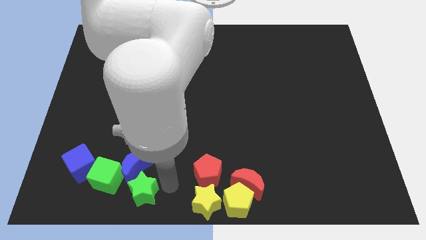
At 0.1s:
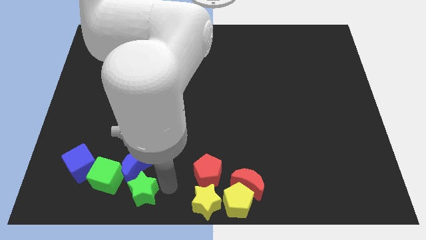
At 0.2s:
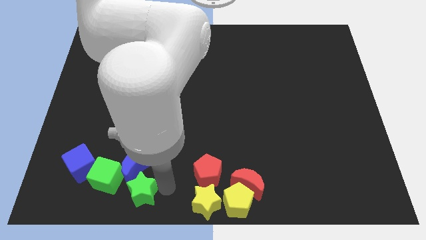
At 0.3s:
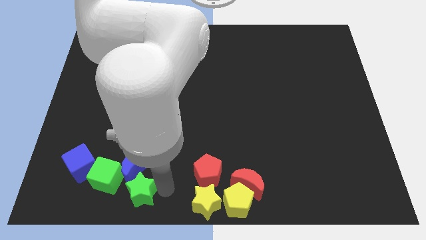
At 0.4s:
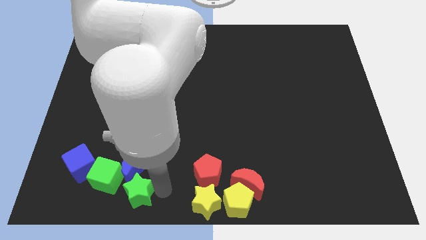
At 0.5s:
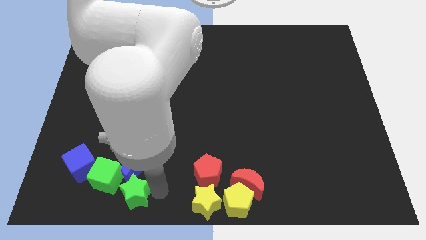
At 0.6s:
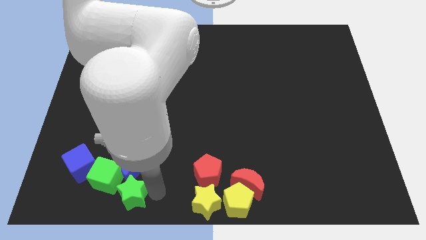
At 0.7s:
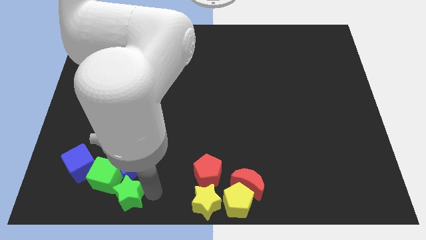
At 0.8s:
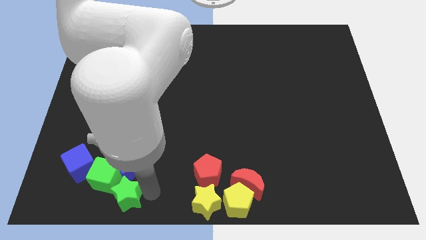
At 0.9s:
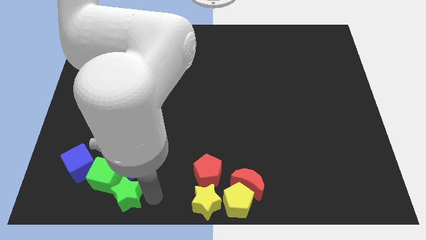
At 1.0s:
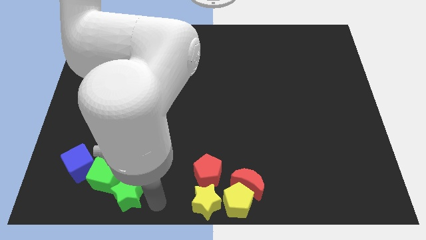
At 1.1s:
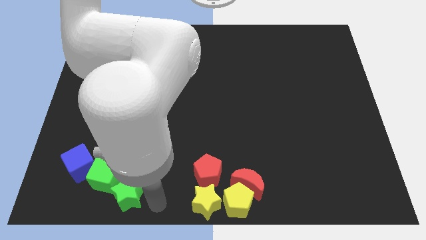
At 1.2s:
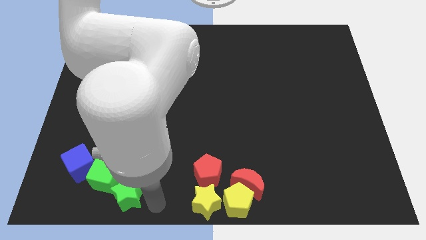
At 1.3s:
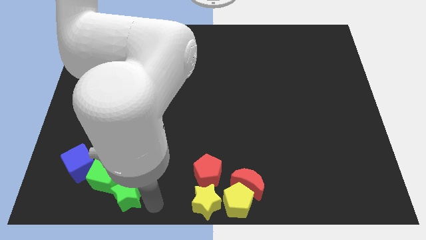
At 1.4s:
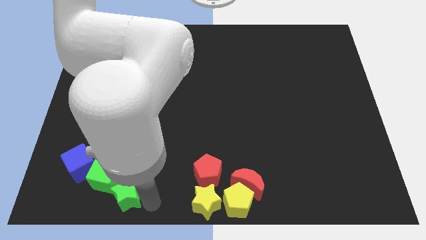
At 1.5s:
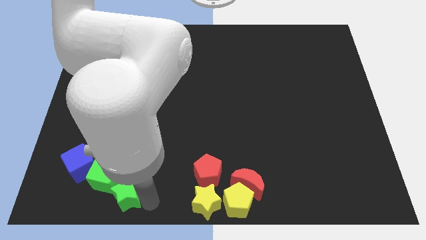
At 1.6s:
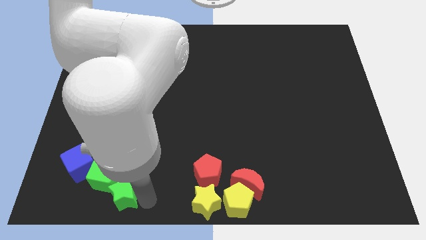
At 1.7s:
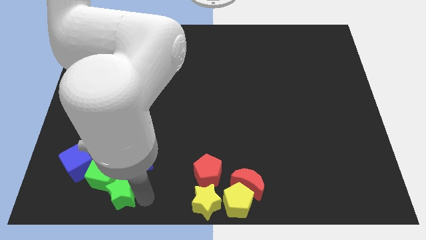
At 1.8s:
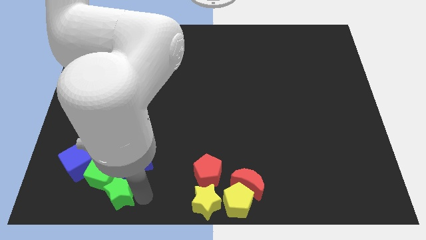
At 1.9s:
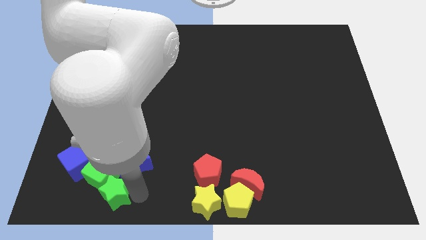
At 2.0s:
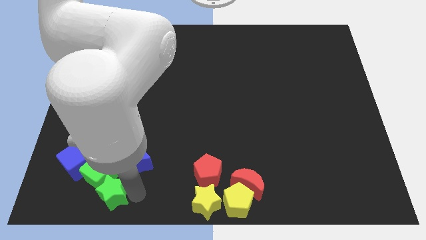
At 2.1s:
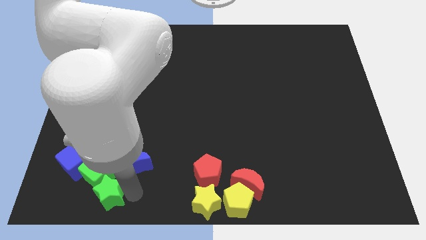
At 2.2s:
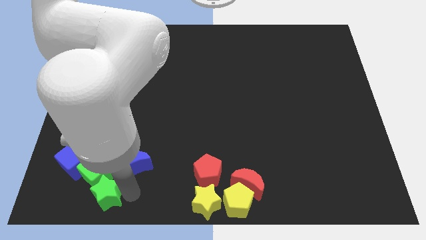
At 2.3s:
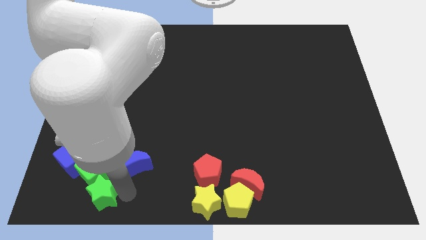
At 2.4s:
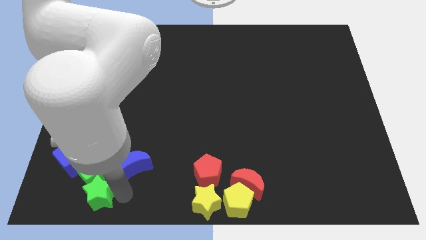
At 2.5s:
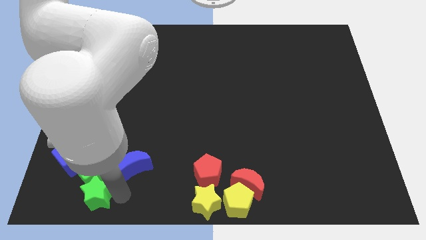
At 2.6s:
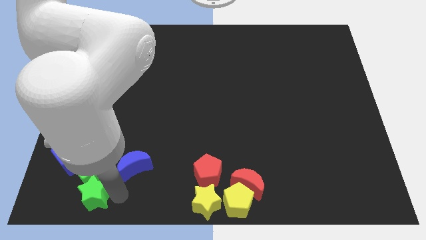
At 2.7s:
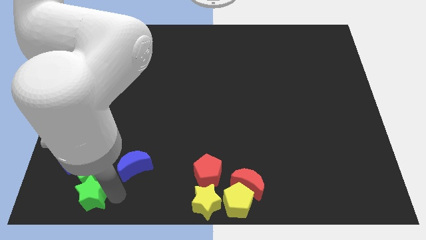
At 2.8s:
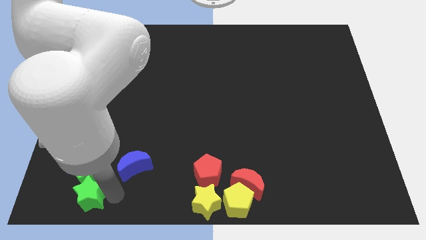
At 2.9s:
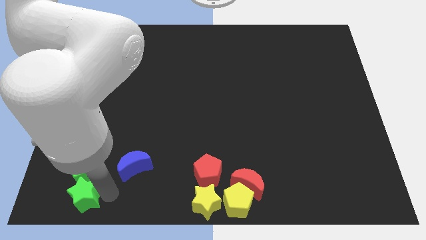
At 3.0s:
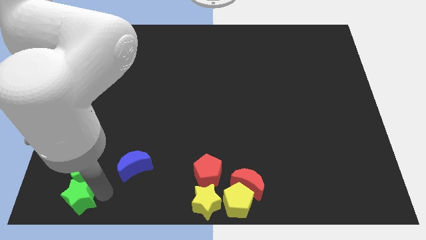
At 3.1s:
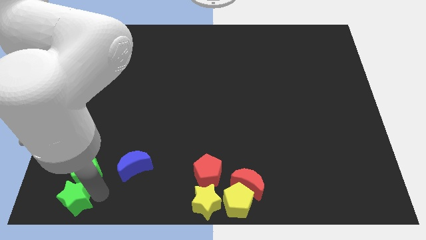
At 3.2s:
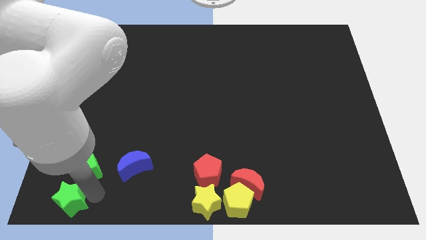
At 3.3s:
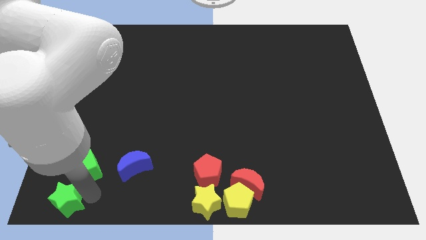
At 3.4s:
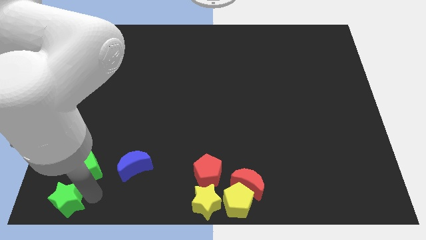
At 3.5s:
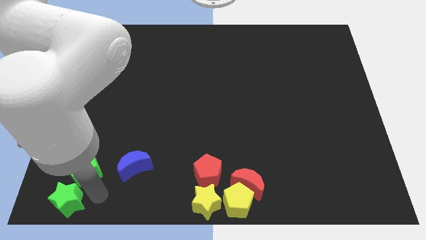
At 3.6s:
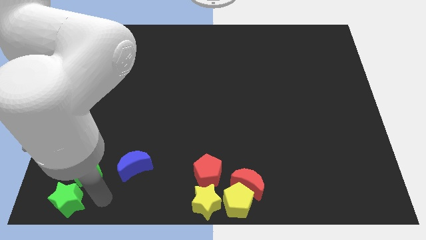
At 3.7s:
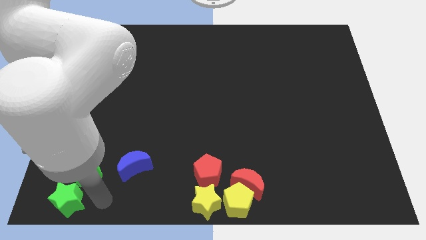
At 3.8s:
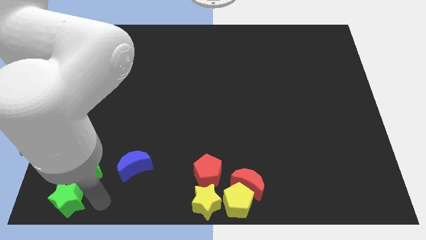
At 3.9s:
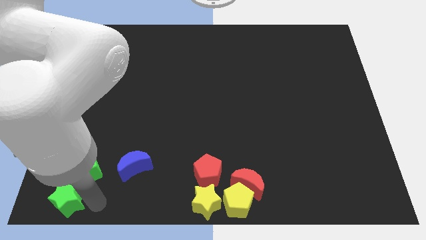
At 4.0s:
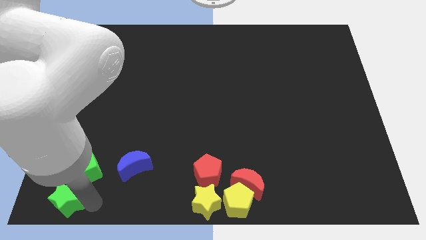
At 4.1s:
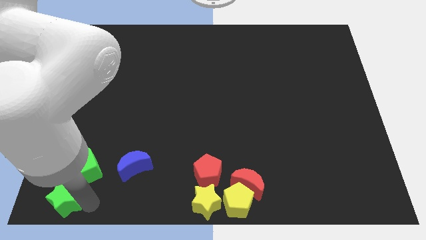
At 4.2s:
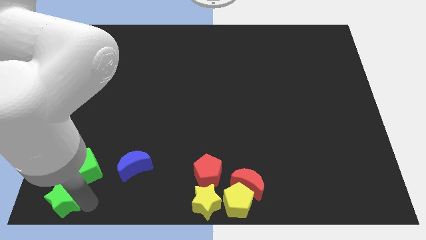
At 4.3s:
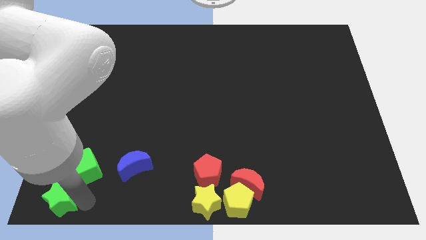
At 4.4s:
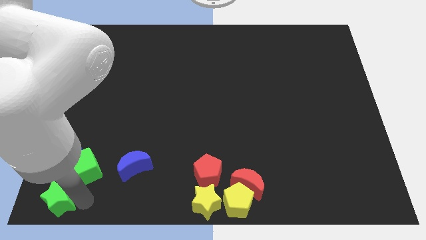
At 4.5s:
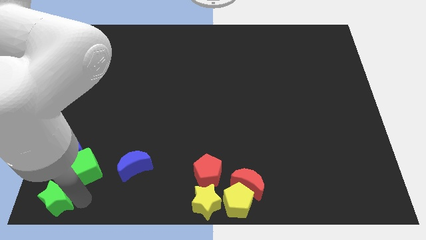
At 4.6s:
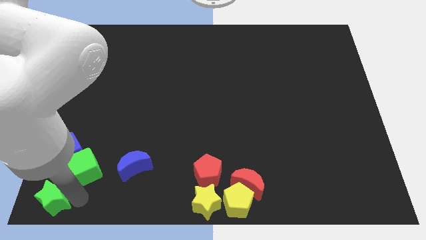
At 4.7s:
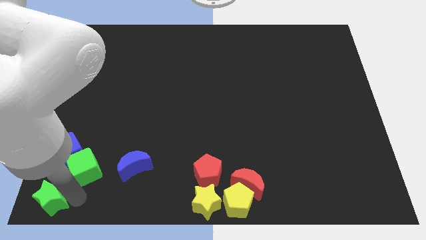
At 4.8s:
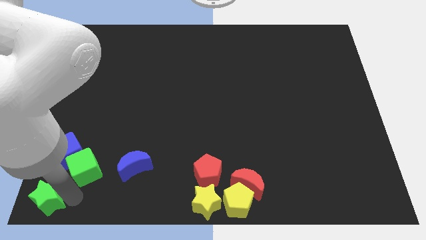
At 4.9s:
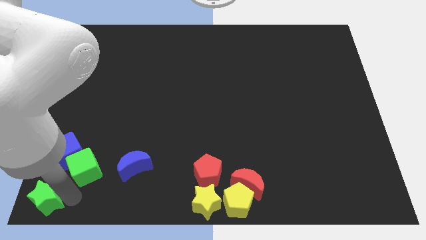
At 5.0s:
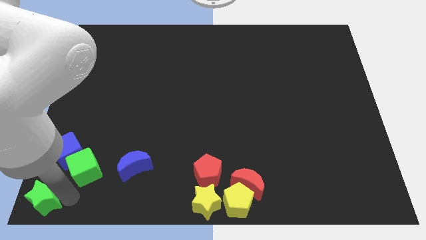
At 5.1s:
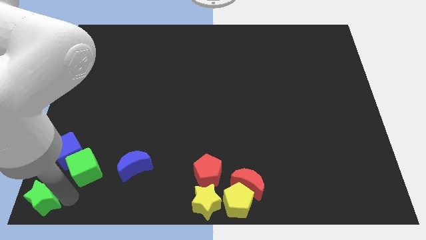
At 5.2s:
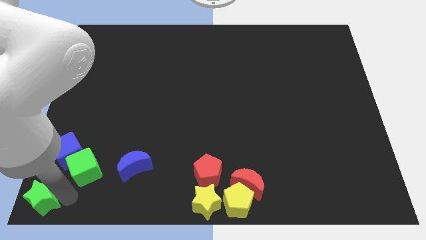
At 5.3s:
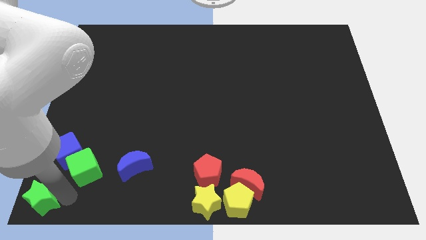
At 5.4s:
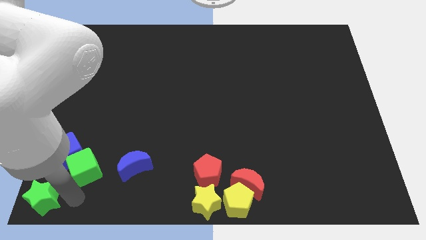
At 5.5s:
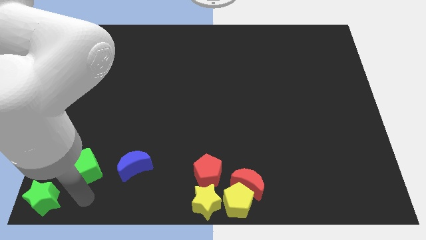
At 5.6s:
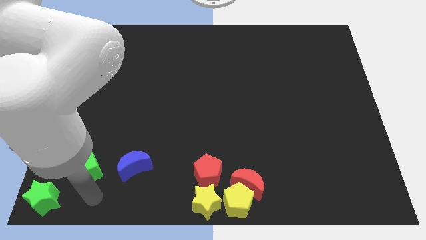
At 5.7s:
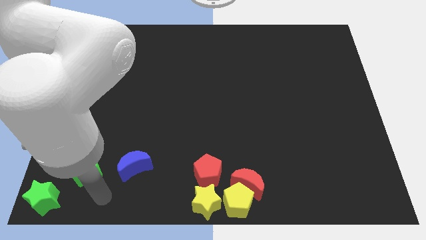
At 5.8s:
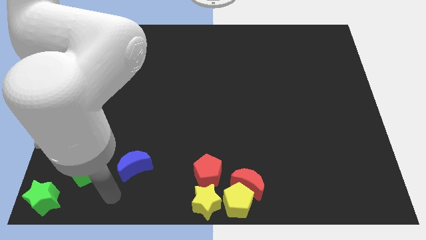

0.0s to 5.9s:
place the green star to the bottom left corner

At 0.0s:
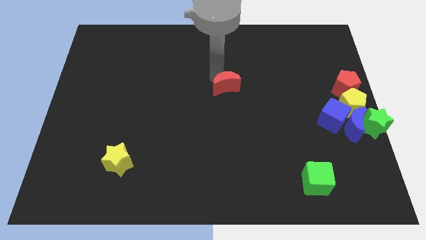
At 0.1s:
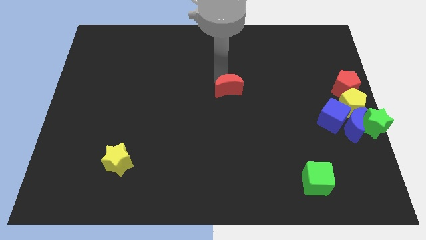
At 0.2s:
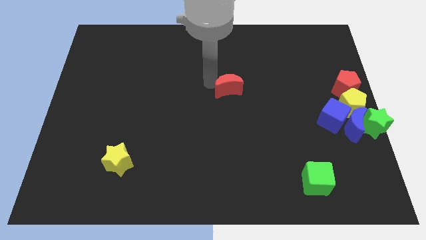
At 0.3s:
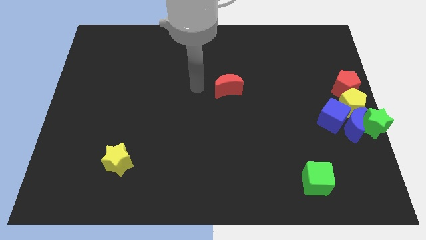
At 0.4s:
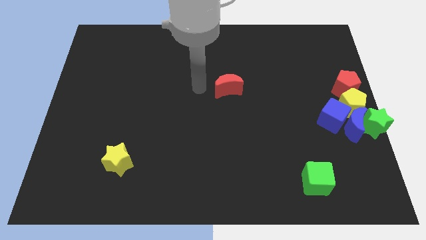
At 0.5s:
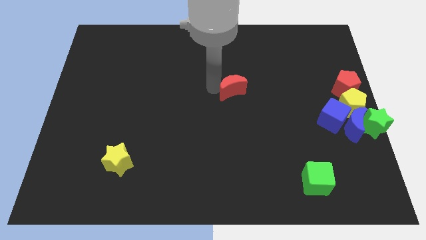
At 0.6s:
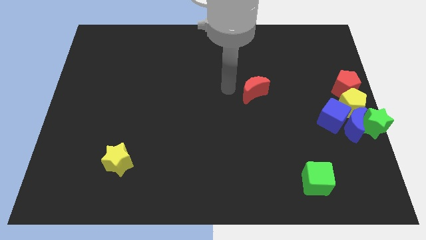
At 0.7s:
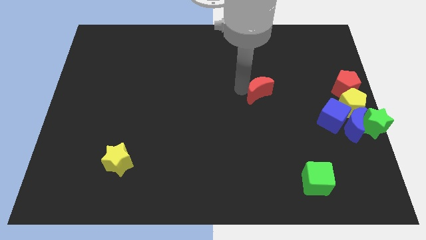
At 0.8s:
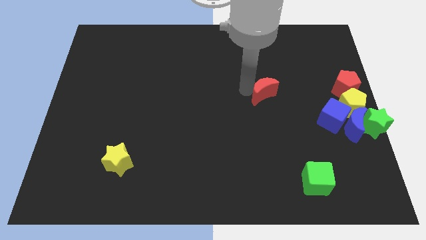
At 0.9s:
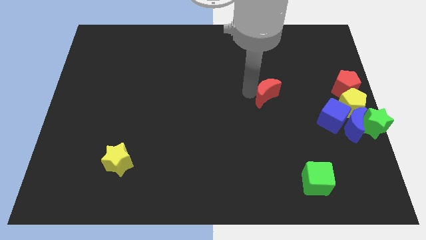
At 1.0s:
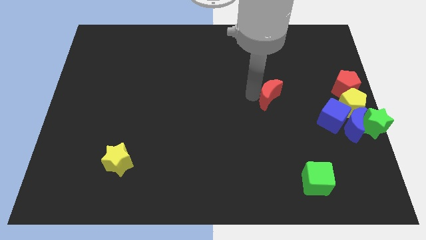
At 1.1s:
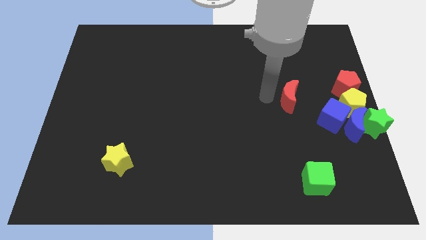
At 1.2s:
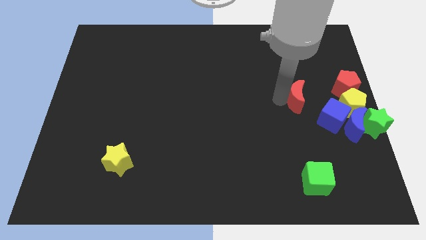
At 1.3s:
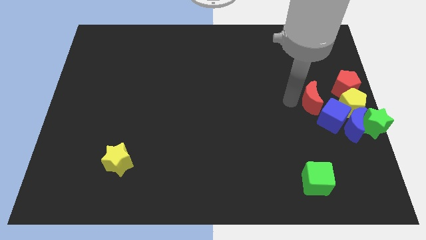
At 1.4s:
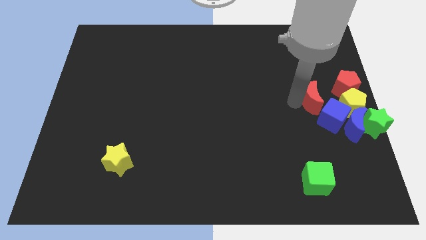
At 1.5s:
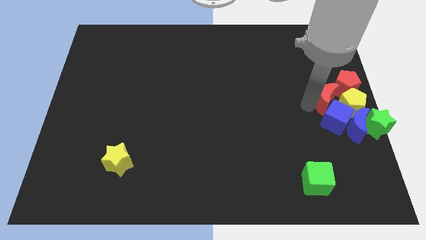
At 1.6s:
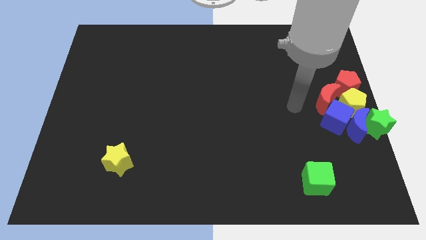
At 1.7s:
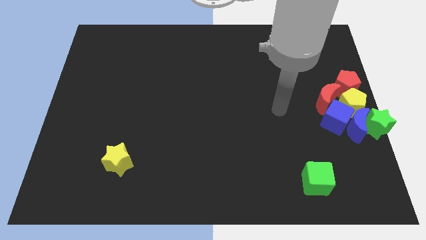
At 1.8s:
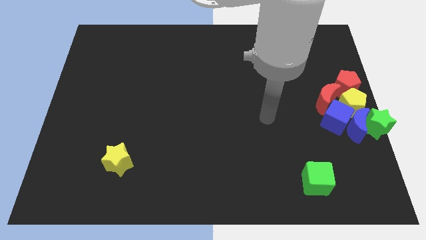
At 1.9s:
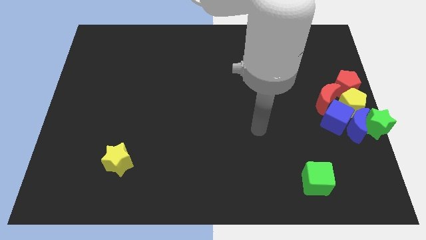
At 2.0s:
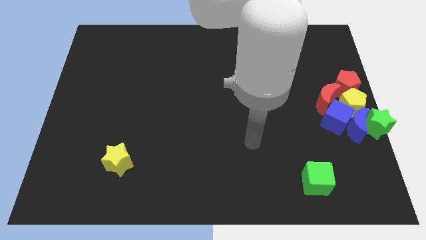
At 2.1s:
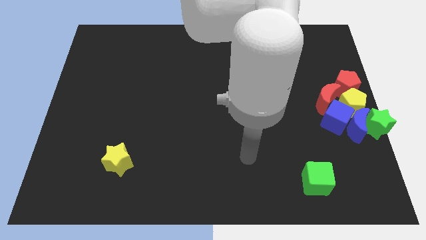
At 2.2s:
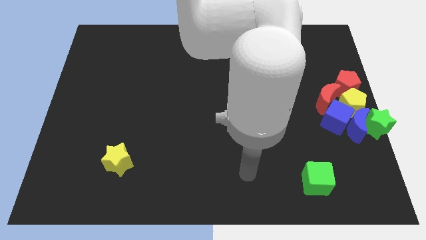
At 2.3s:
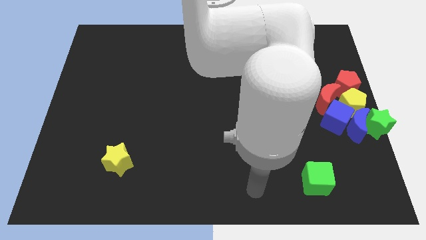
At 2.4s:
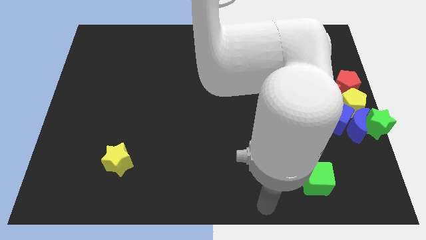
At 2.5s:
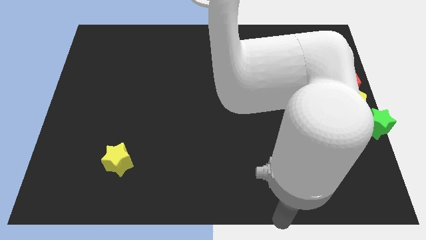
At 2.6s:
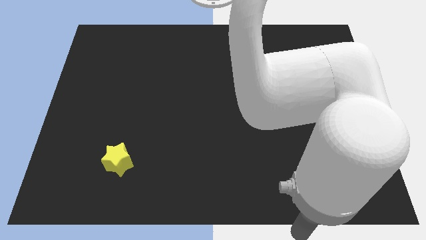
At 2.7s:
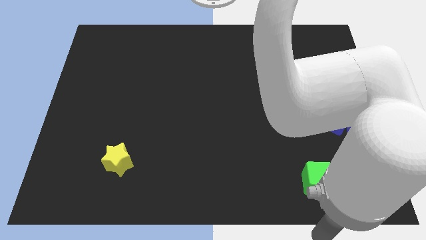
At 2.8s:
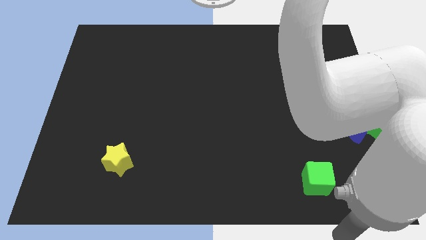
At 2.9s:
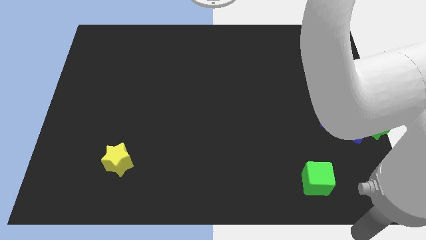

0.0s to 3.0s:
place red crescent towards yellow pentagon

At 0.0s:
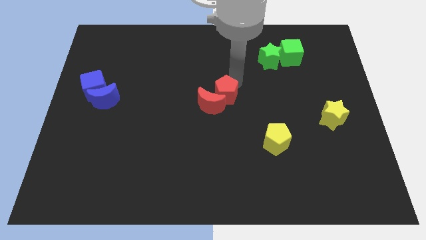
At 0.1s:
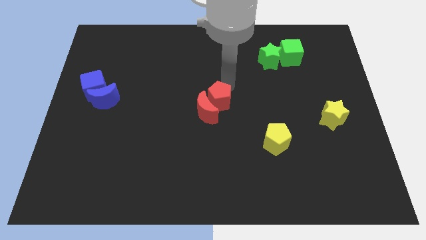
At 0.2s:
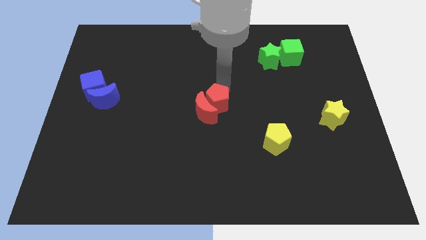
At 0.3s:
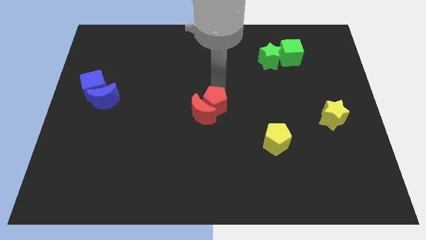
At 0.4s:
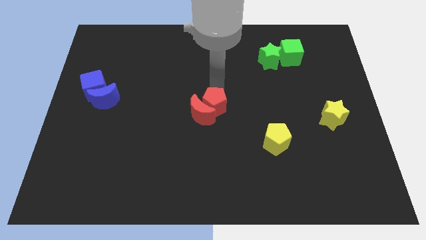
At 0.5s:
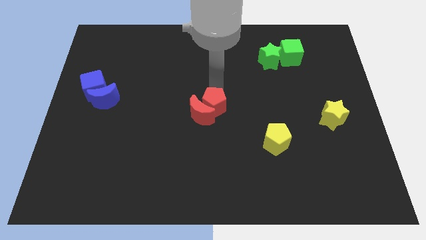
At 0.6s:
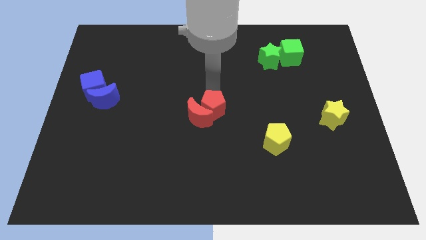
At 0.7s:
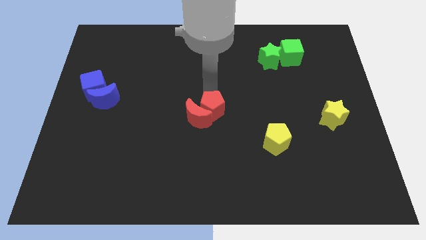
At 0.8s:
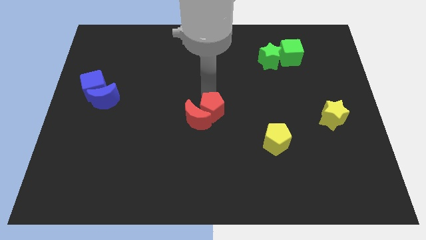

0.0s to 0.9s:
push the red pentagon into the red moon
